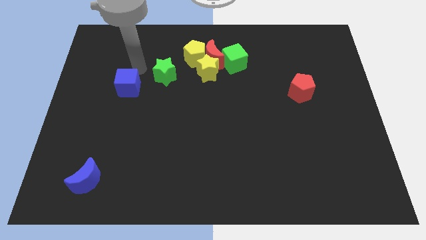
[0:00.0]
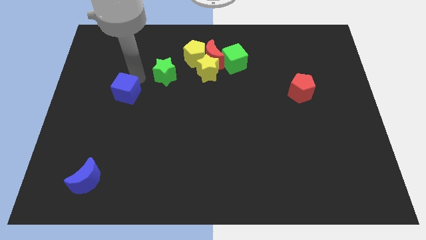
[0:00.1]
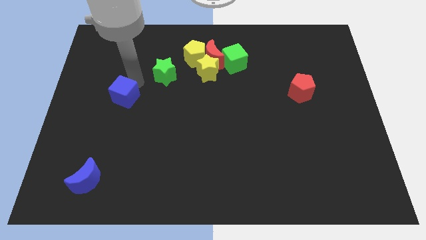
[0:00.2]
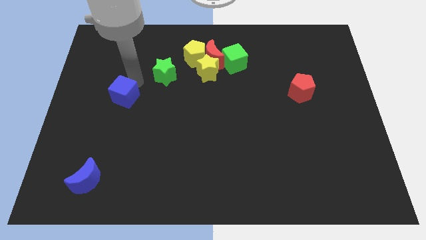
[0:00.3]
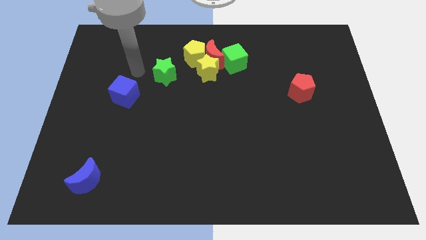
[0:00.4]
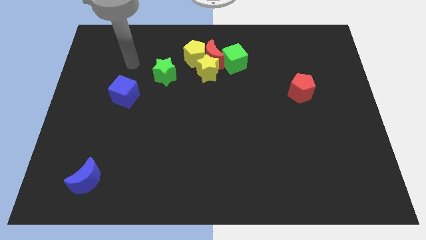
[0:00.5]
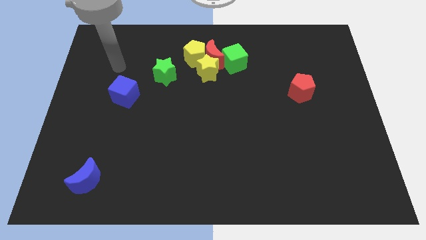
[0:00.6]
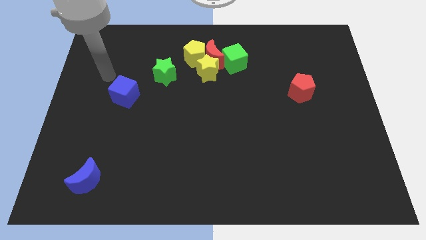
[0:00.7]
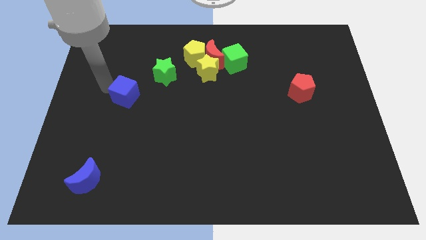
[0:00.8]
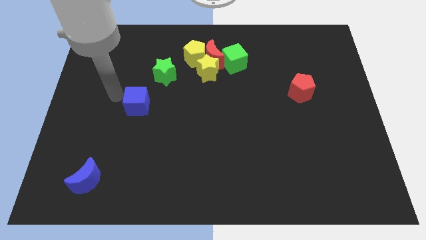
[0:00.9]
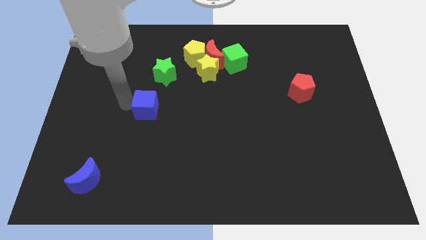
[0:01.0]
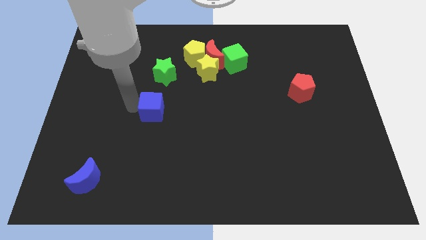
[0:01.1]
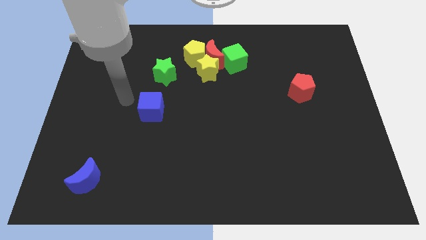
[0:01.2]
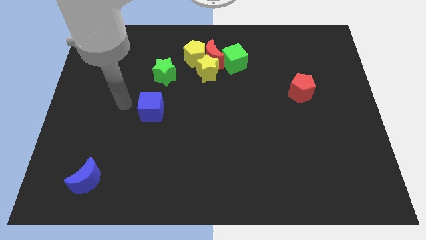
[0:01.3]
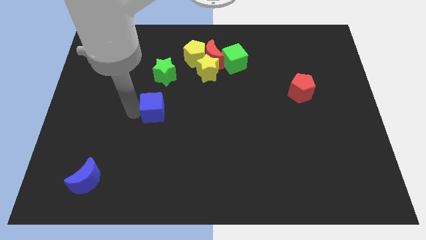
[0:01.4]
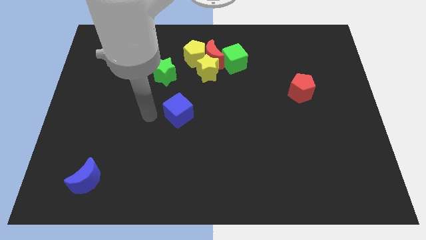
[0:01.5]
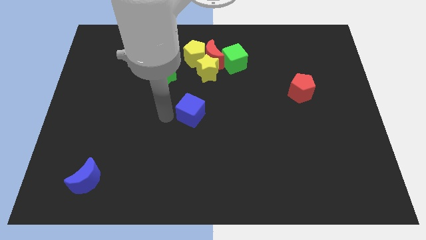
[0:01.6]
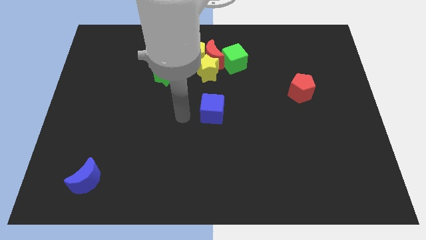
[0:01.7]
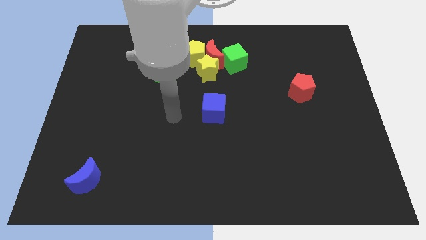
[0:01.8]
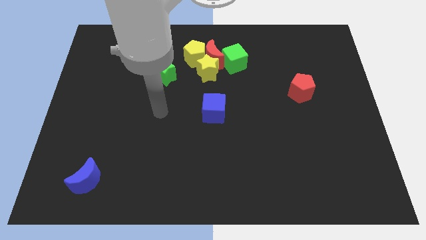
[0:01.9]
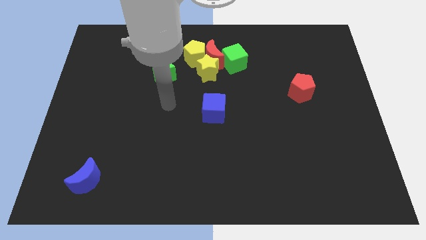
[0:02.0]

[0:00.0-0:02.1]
move blue cube to the center

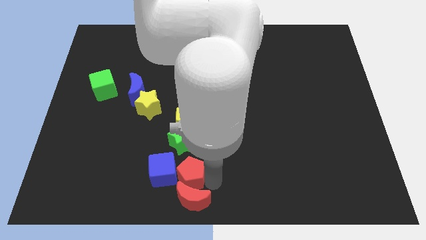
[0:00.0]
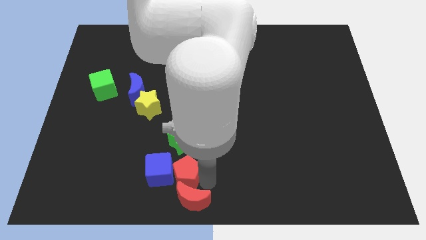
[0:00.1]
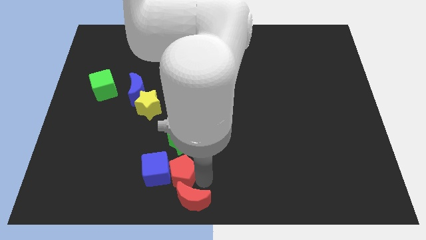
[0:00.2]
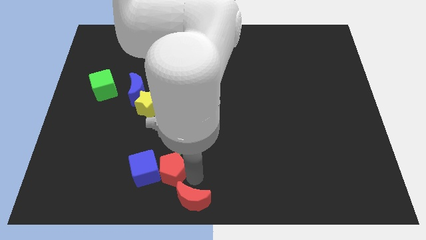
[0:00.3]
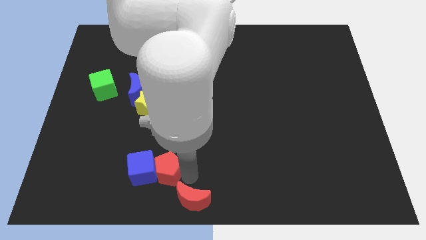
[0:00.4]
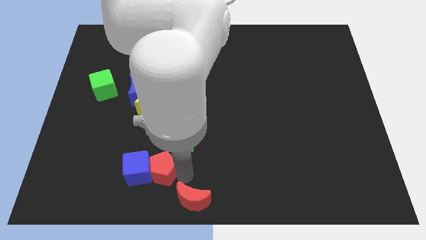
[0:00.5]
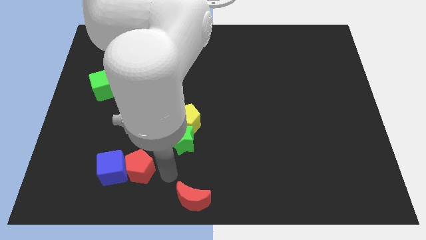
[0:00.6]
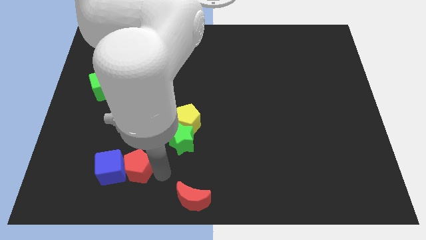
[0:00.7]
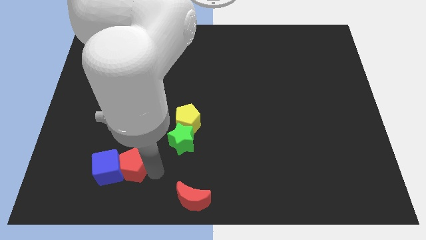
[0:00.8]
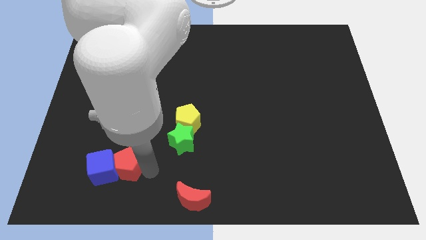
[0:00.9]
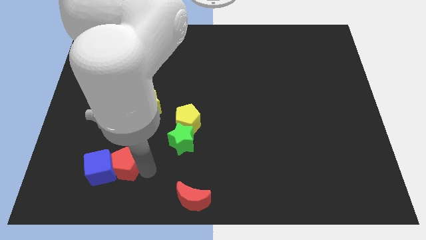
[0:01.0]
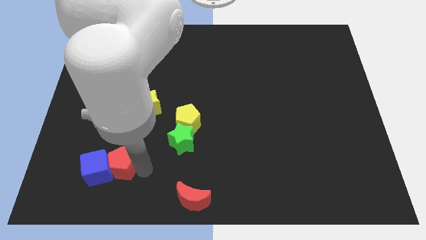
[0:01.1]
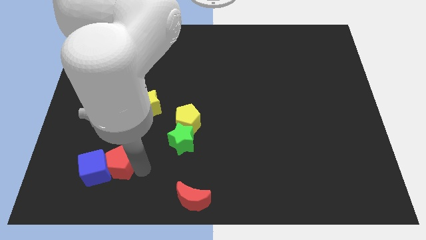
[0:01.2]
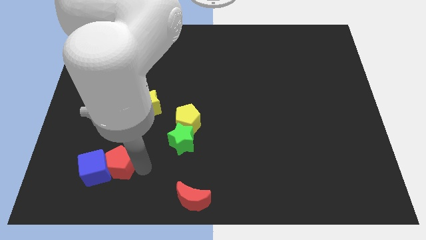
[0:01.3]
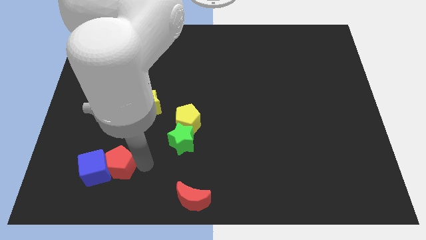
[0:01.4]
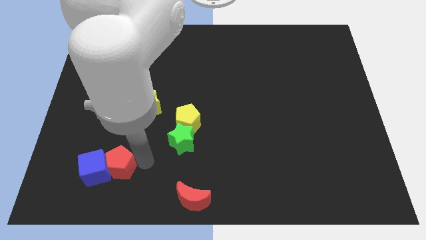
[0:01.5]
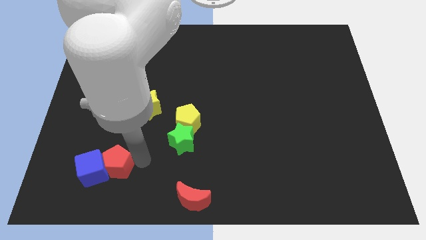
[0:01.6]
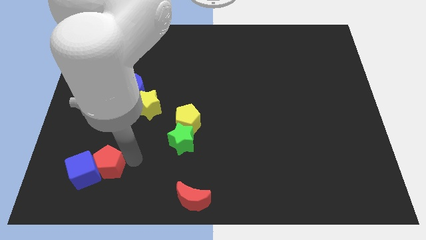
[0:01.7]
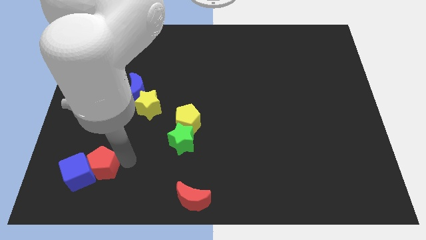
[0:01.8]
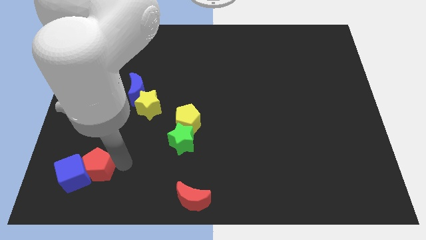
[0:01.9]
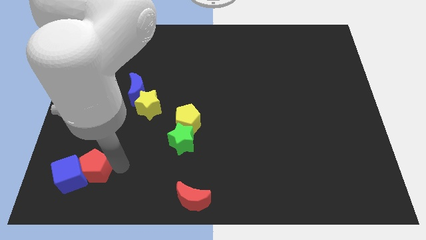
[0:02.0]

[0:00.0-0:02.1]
push the blue cube with the red pentagon towards the bottom left of the board

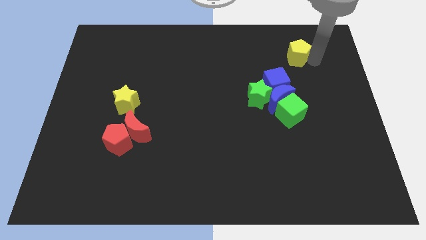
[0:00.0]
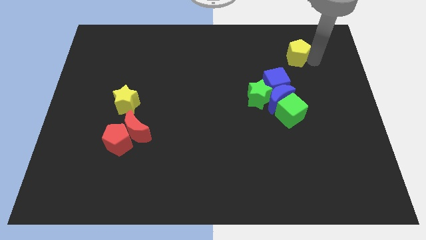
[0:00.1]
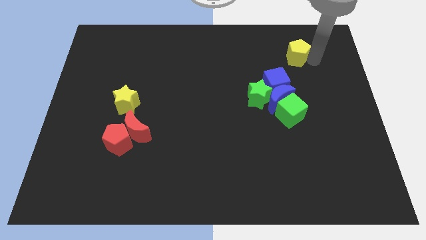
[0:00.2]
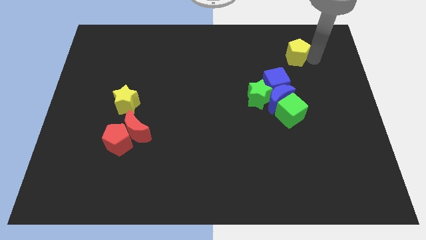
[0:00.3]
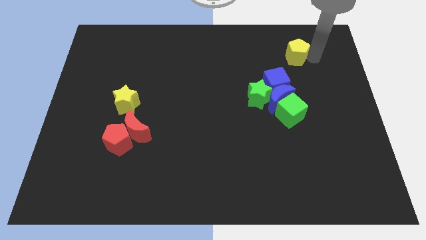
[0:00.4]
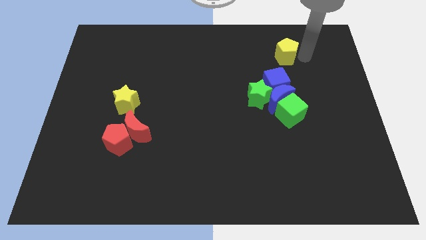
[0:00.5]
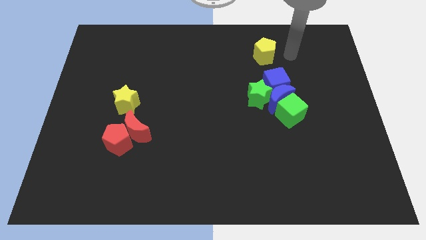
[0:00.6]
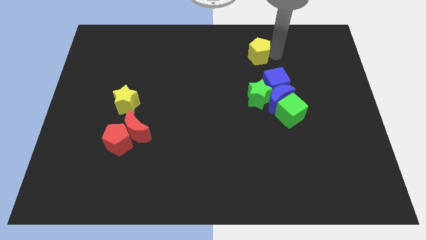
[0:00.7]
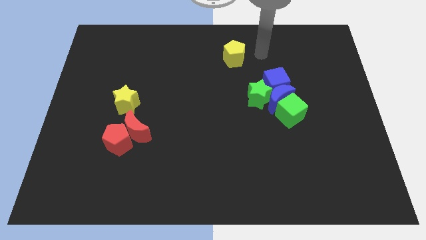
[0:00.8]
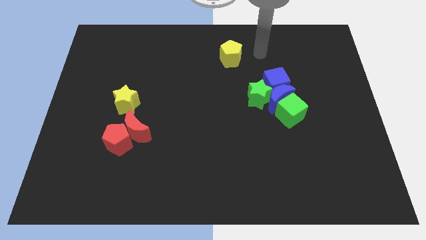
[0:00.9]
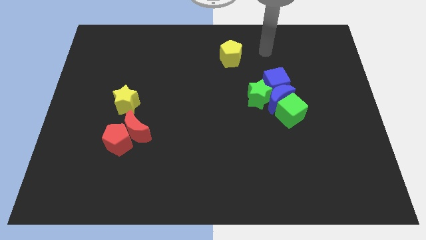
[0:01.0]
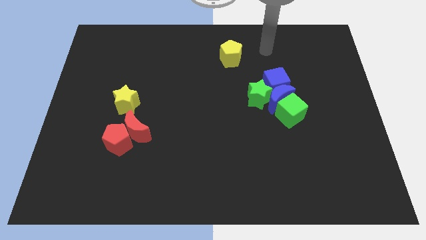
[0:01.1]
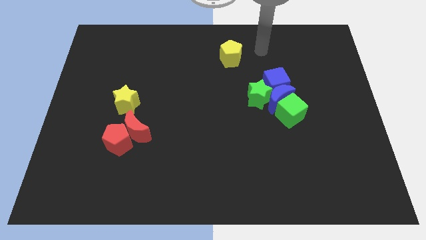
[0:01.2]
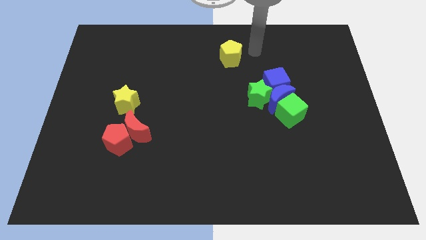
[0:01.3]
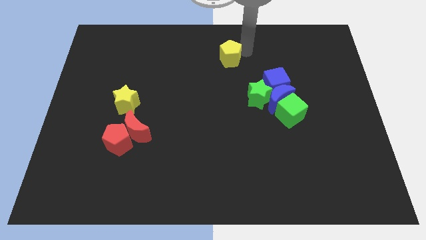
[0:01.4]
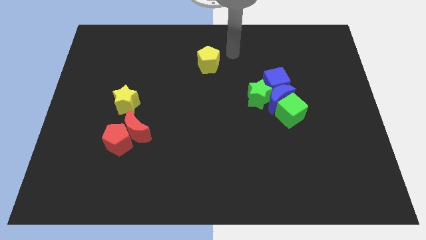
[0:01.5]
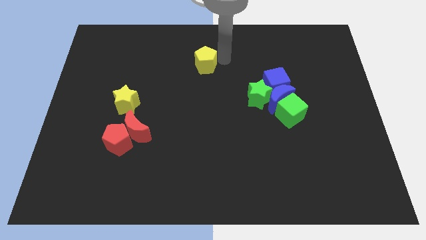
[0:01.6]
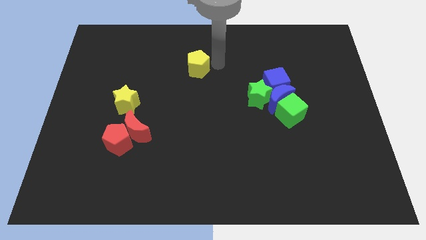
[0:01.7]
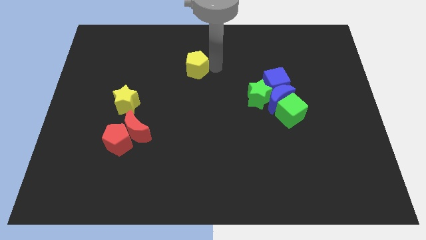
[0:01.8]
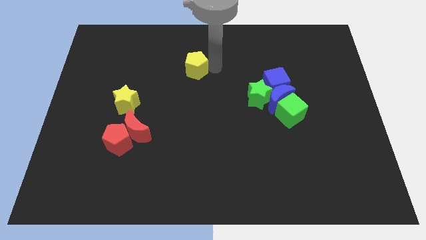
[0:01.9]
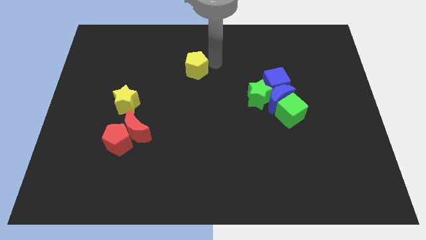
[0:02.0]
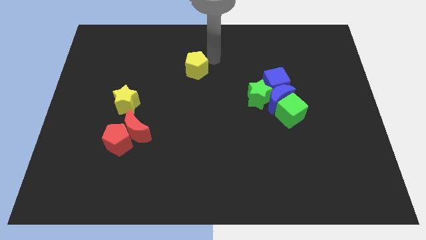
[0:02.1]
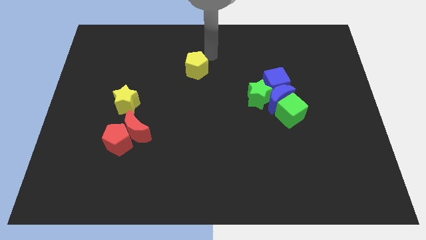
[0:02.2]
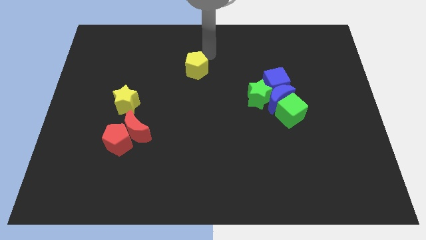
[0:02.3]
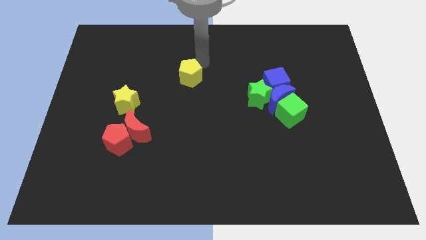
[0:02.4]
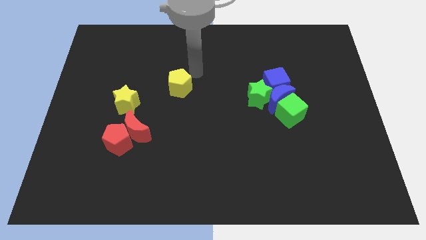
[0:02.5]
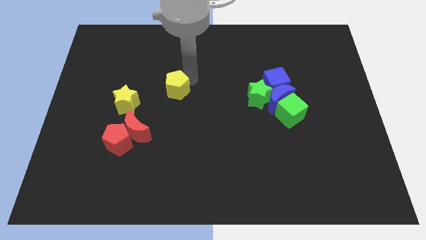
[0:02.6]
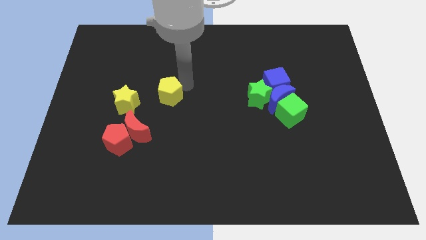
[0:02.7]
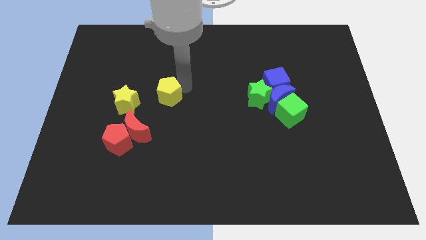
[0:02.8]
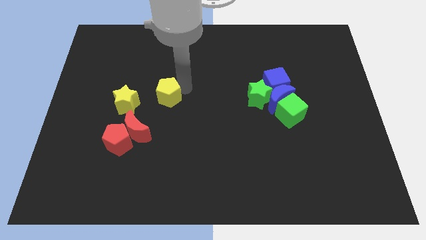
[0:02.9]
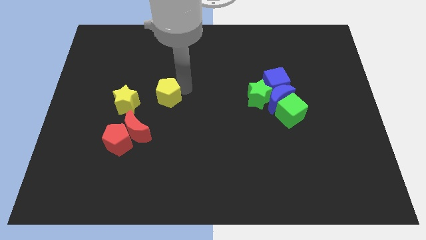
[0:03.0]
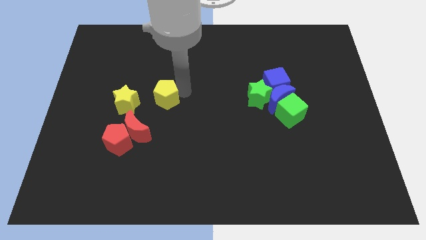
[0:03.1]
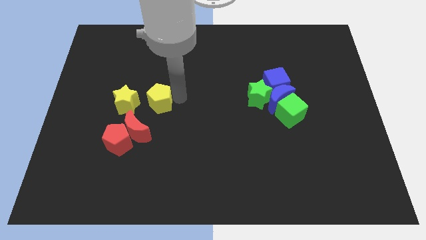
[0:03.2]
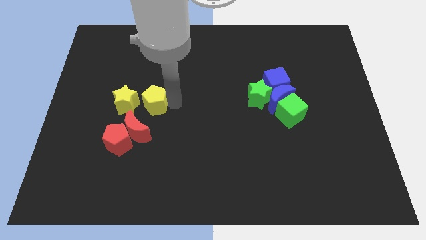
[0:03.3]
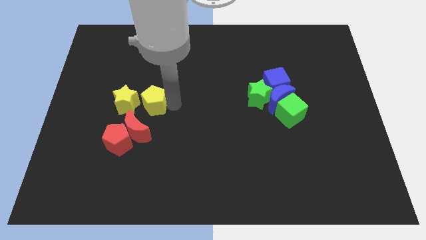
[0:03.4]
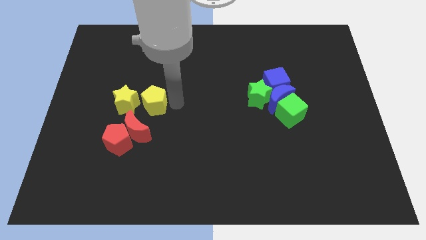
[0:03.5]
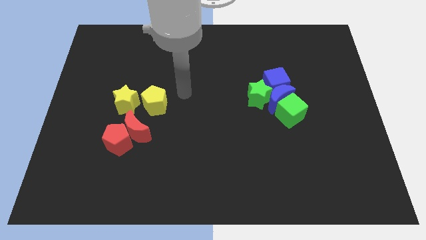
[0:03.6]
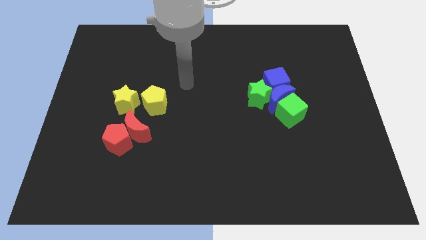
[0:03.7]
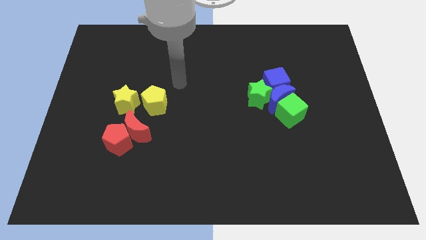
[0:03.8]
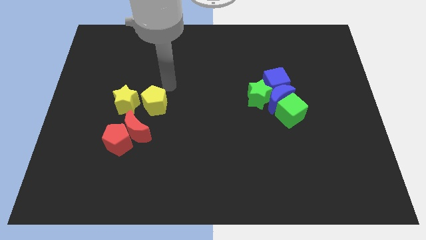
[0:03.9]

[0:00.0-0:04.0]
move the yellow pentagon to the right side of the yellow star

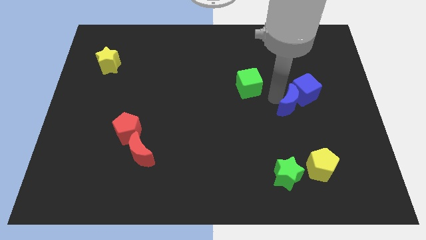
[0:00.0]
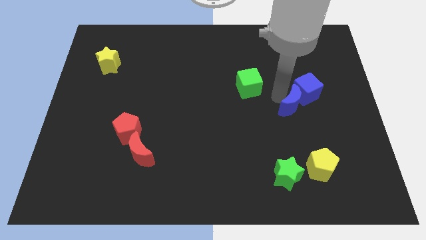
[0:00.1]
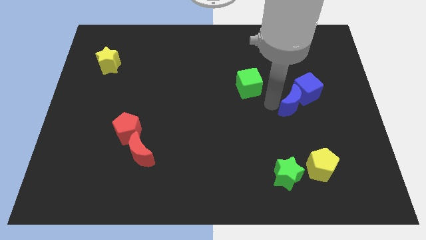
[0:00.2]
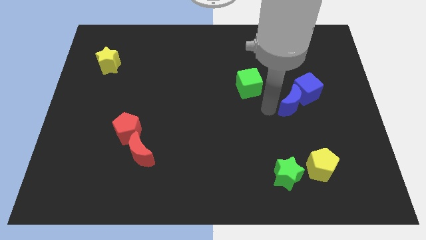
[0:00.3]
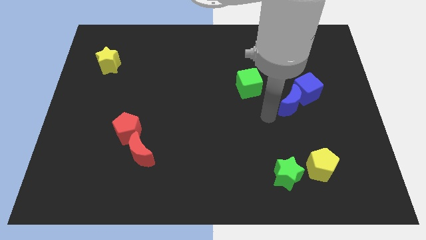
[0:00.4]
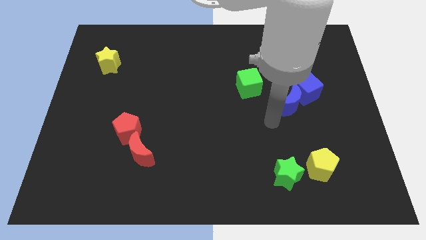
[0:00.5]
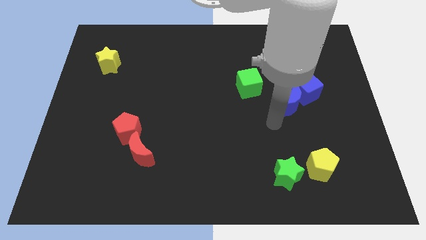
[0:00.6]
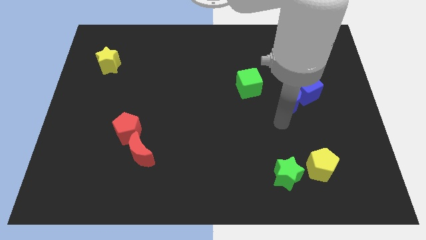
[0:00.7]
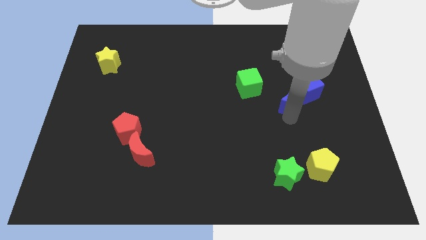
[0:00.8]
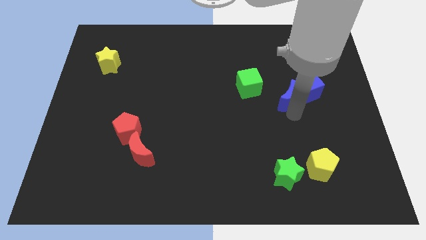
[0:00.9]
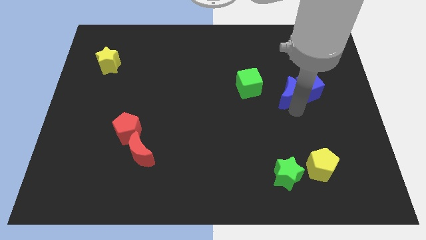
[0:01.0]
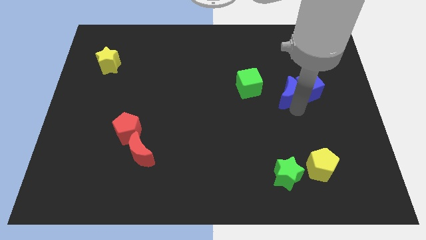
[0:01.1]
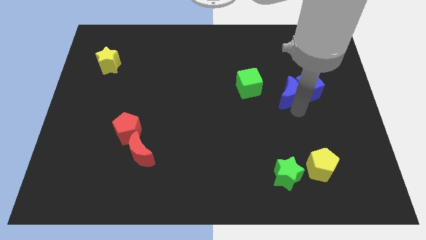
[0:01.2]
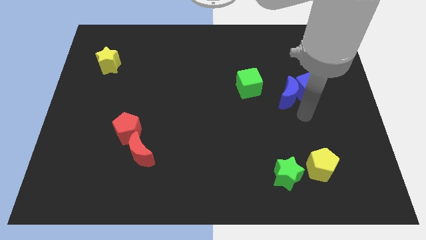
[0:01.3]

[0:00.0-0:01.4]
move the blue crescent slightly to the top
